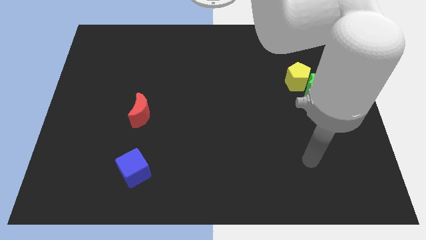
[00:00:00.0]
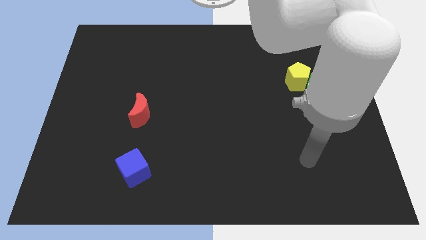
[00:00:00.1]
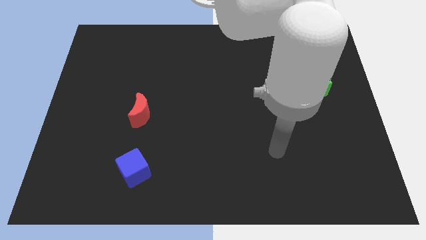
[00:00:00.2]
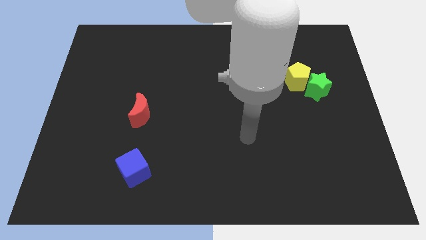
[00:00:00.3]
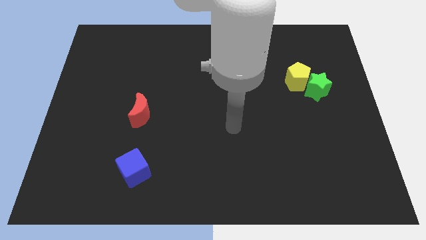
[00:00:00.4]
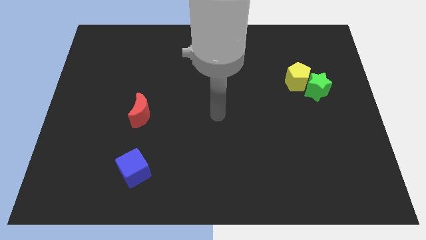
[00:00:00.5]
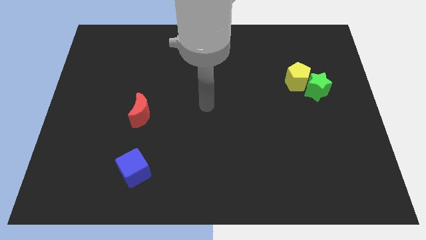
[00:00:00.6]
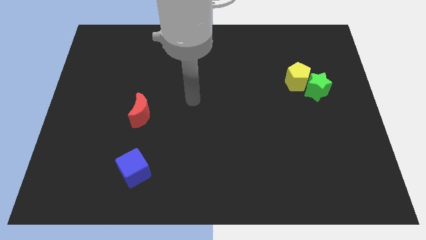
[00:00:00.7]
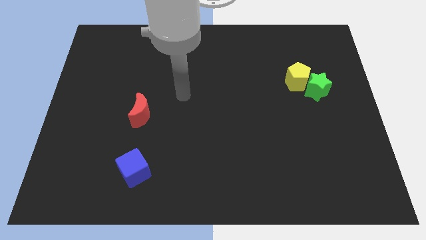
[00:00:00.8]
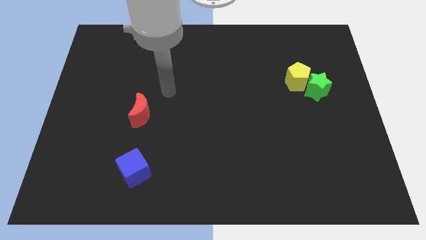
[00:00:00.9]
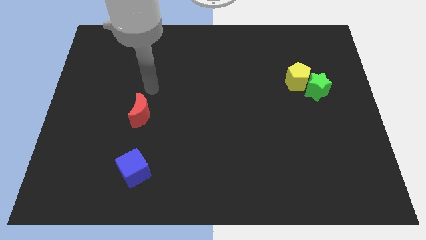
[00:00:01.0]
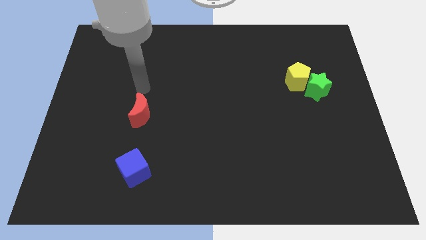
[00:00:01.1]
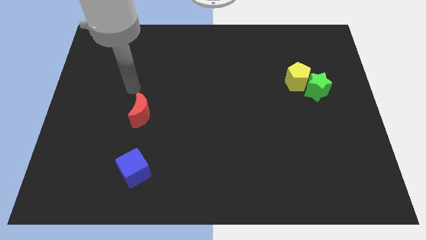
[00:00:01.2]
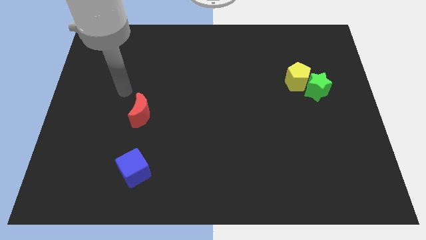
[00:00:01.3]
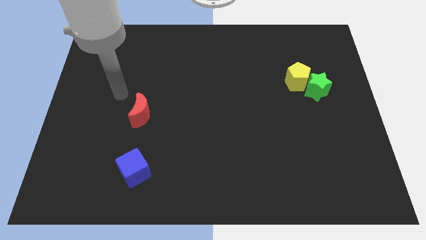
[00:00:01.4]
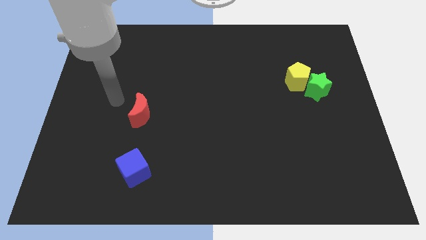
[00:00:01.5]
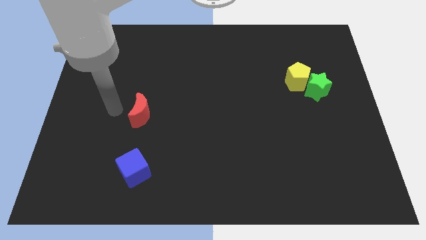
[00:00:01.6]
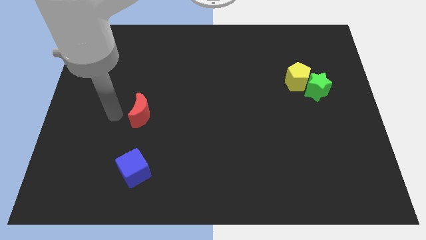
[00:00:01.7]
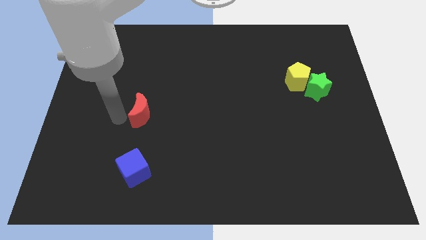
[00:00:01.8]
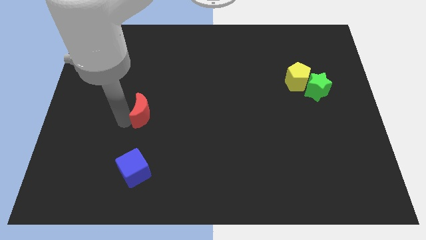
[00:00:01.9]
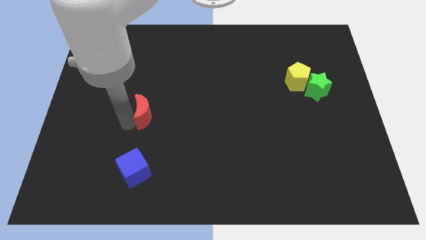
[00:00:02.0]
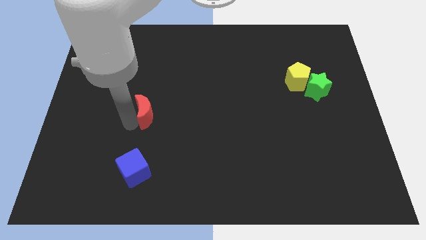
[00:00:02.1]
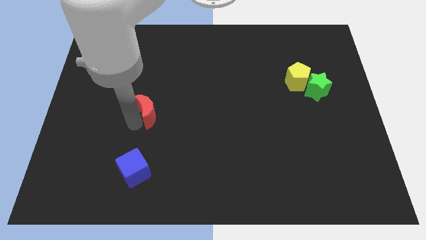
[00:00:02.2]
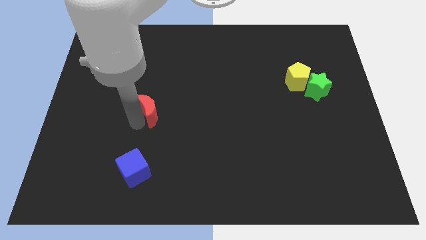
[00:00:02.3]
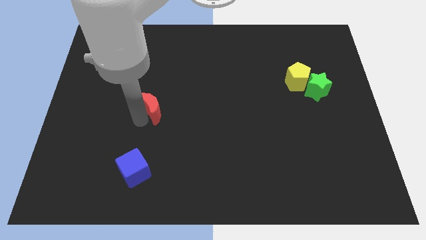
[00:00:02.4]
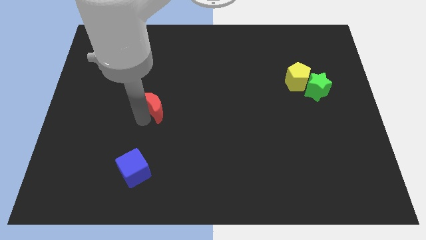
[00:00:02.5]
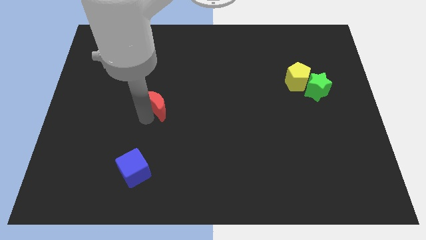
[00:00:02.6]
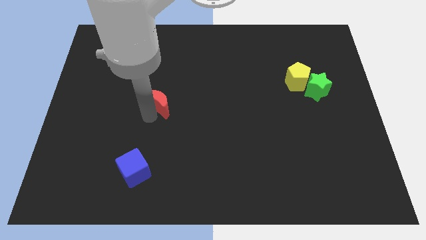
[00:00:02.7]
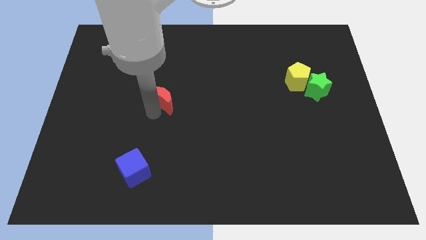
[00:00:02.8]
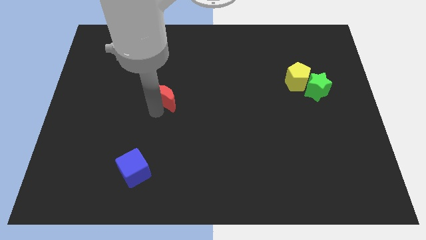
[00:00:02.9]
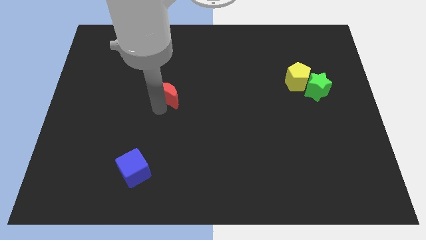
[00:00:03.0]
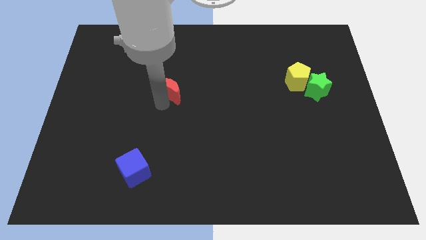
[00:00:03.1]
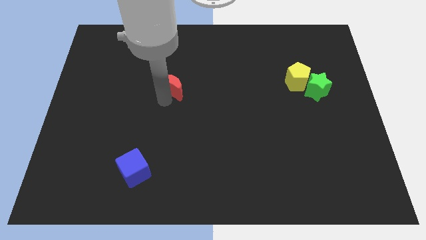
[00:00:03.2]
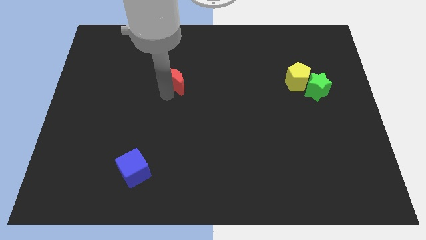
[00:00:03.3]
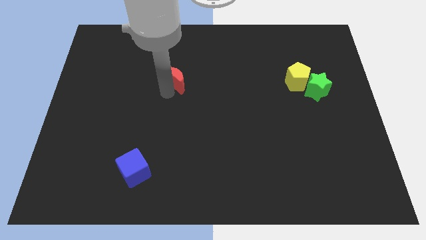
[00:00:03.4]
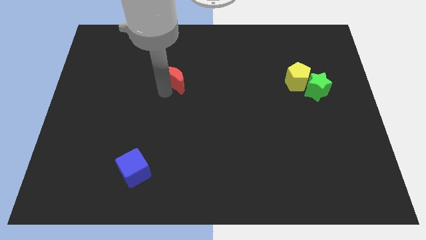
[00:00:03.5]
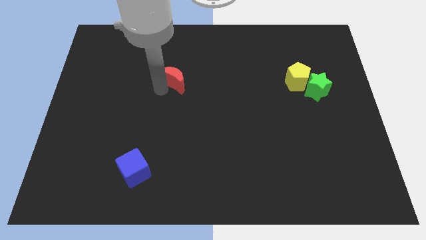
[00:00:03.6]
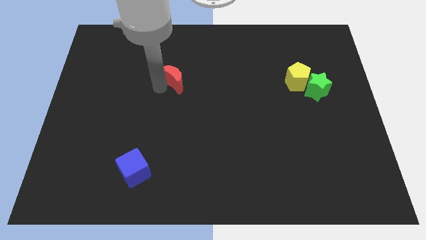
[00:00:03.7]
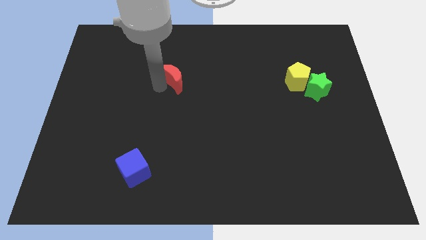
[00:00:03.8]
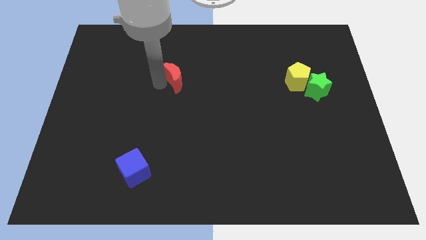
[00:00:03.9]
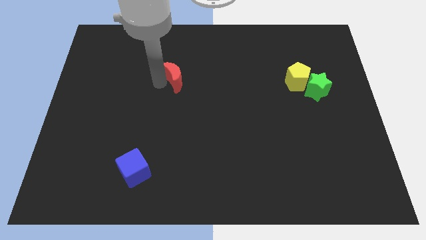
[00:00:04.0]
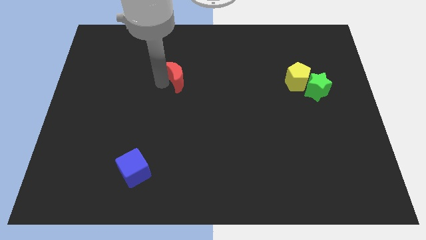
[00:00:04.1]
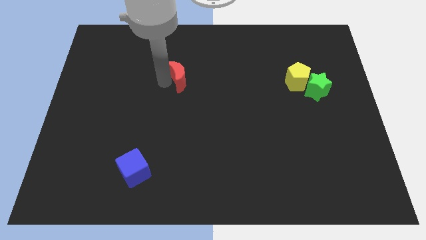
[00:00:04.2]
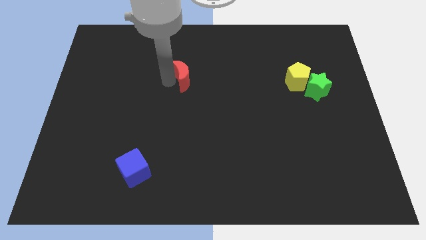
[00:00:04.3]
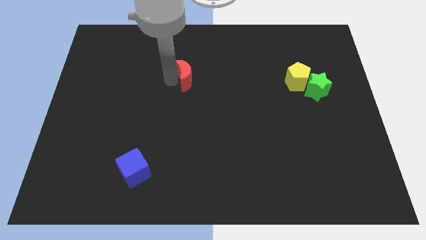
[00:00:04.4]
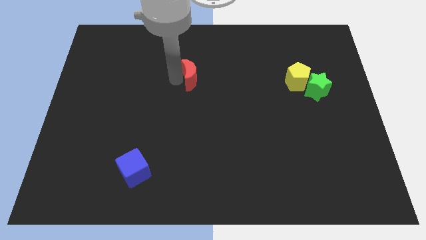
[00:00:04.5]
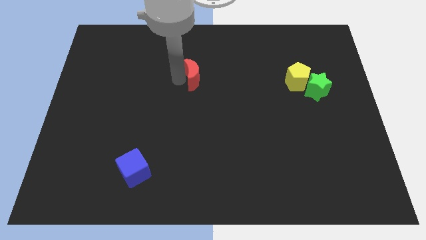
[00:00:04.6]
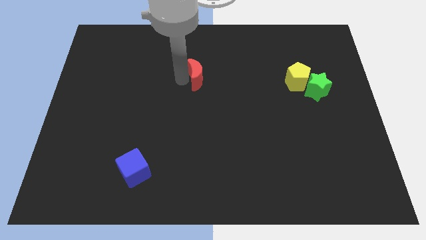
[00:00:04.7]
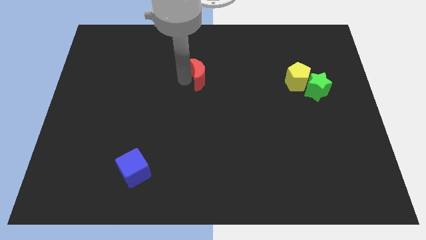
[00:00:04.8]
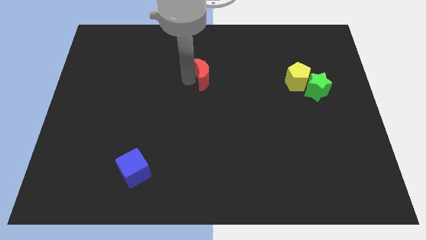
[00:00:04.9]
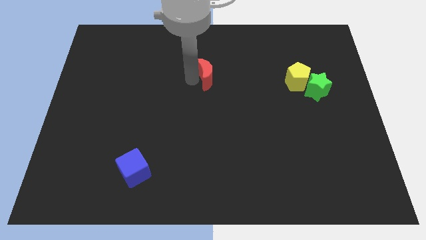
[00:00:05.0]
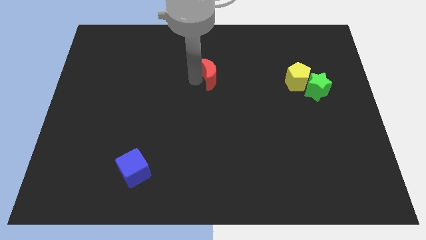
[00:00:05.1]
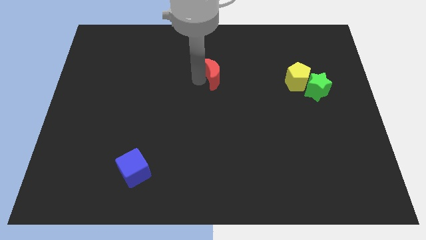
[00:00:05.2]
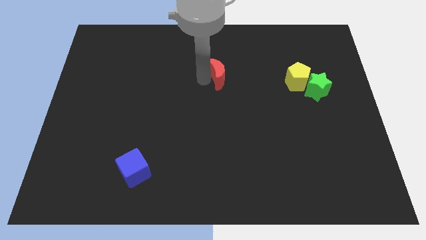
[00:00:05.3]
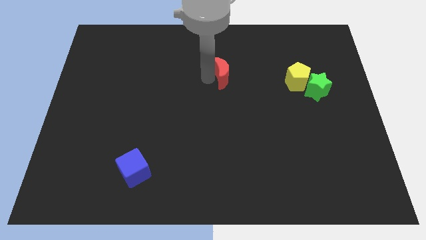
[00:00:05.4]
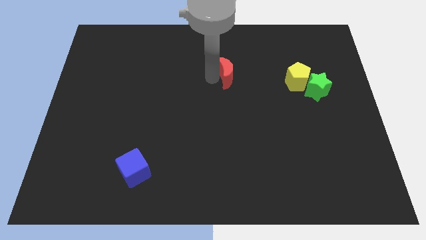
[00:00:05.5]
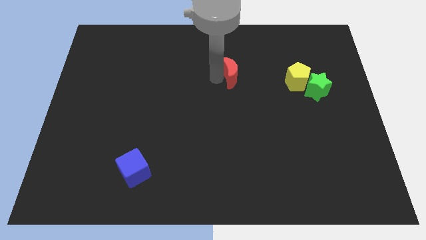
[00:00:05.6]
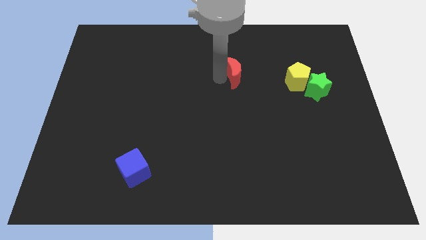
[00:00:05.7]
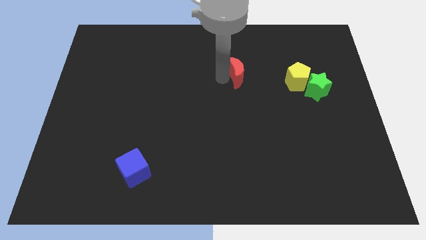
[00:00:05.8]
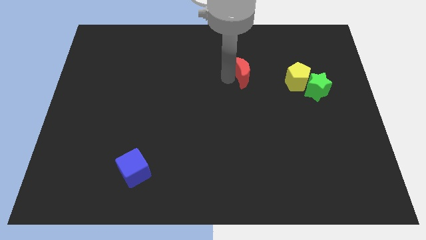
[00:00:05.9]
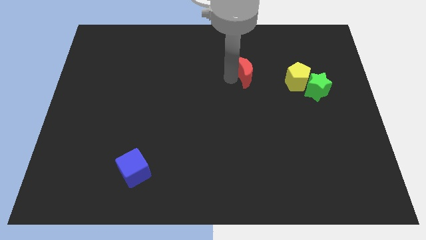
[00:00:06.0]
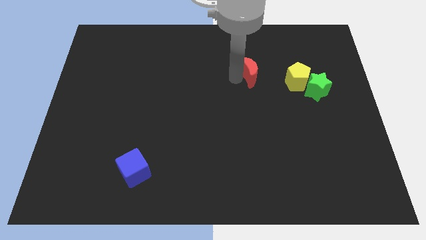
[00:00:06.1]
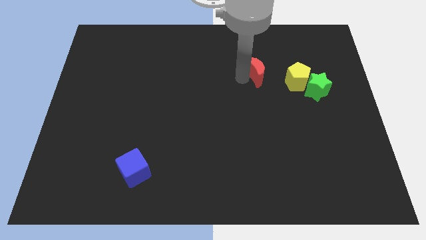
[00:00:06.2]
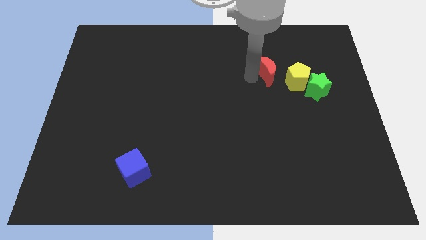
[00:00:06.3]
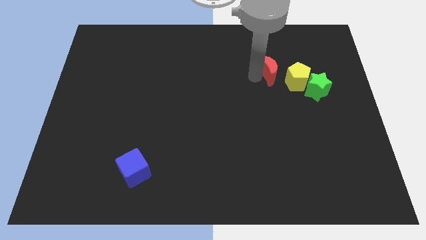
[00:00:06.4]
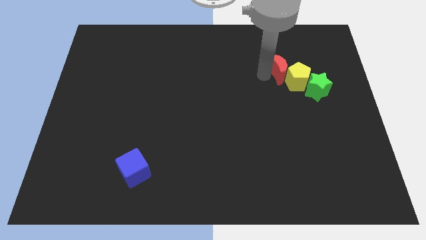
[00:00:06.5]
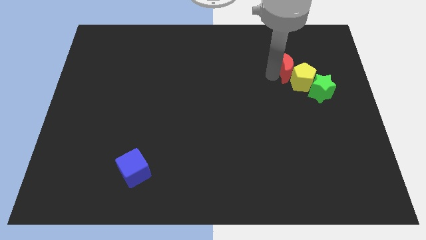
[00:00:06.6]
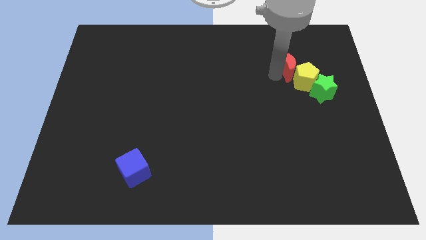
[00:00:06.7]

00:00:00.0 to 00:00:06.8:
move the red block to the yellow block

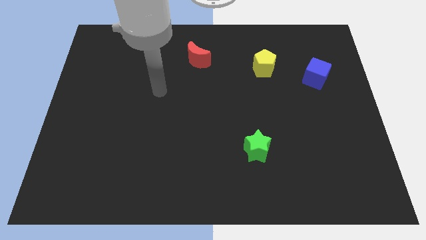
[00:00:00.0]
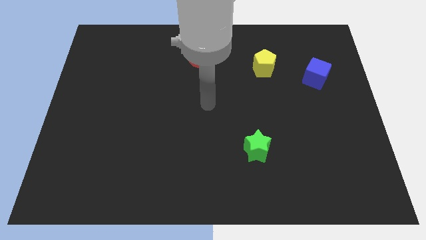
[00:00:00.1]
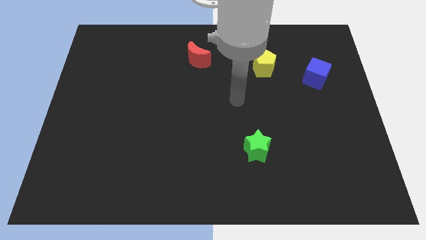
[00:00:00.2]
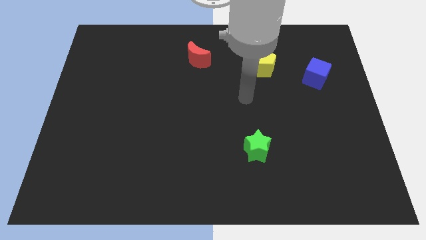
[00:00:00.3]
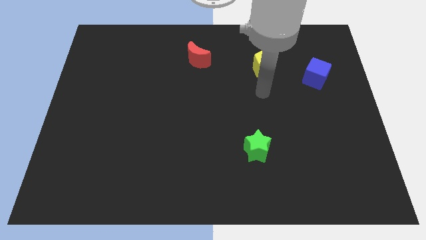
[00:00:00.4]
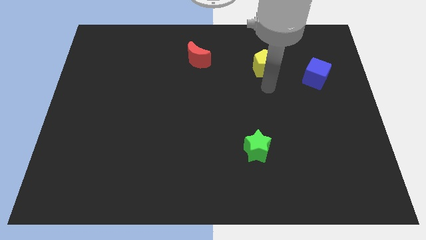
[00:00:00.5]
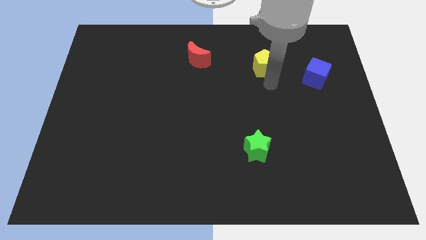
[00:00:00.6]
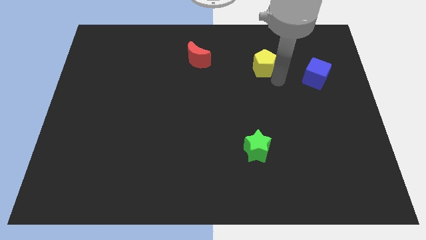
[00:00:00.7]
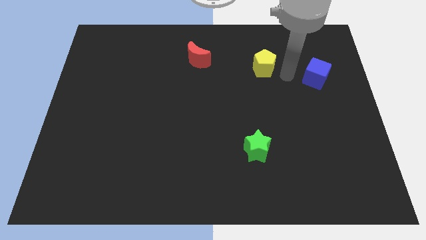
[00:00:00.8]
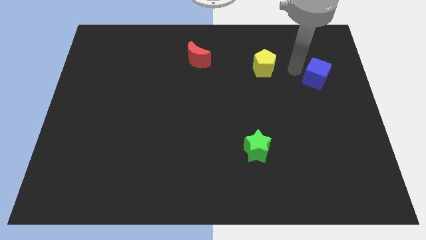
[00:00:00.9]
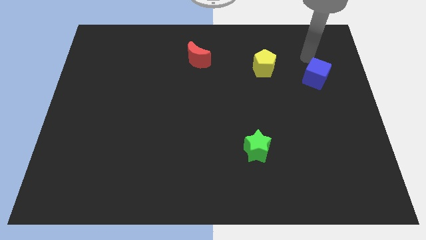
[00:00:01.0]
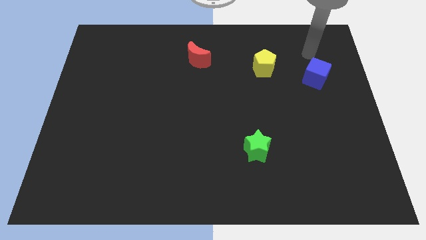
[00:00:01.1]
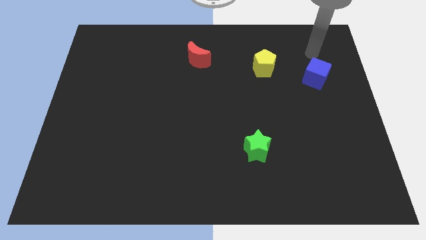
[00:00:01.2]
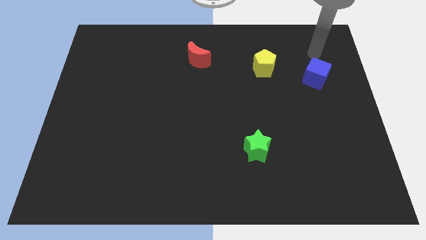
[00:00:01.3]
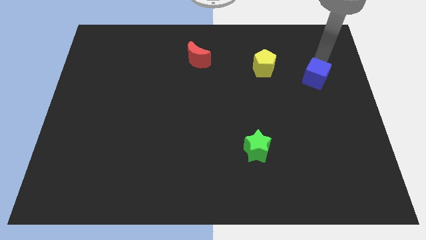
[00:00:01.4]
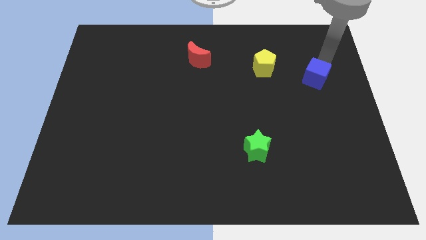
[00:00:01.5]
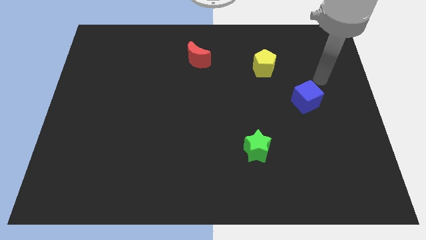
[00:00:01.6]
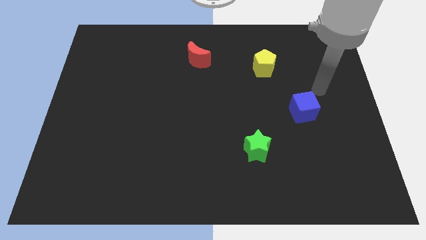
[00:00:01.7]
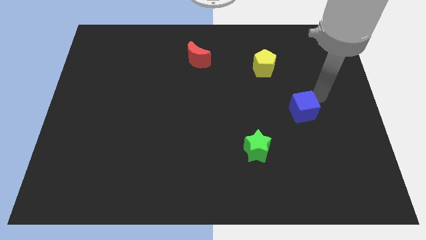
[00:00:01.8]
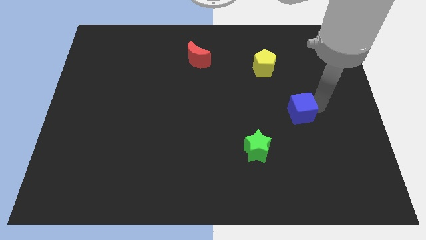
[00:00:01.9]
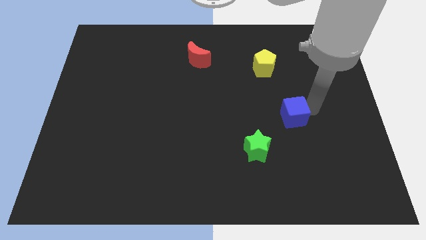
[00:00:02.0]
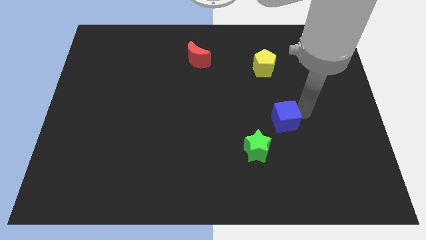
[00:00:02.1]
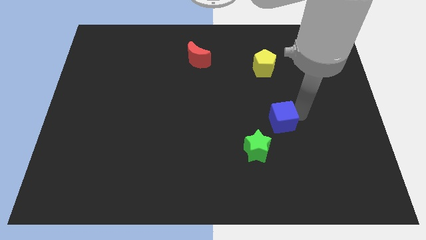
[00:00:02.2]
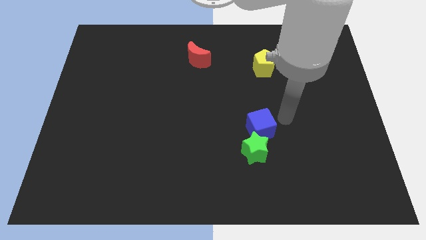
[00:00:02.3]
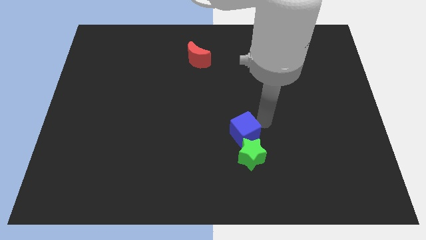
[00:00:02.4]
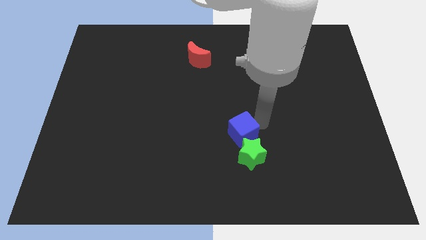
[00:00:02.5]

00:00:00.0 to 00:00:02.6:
push the blue block close to the green block
